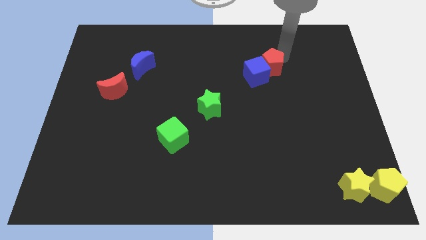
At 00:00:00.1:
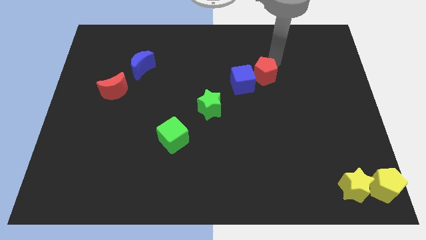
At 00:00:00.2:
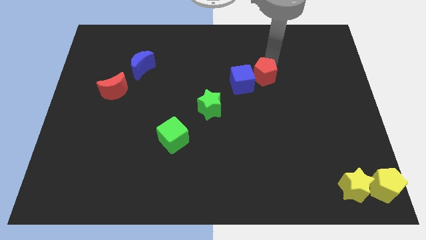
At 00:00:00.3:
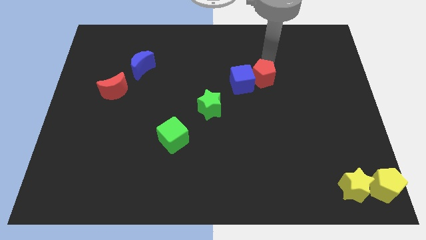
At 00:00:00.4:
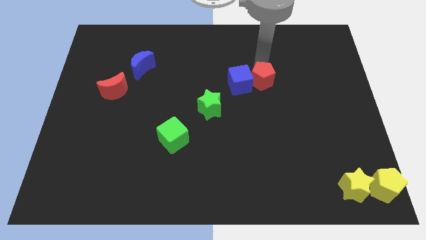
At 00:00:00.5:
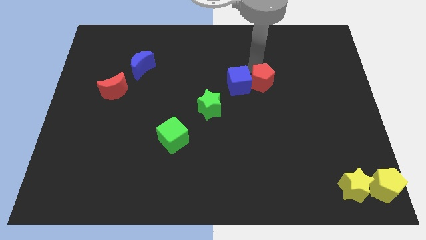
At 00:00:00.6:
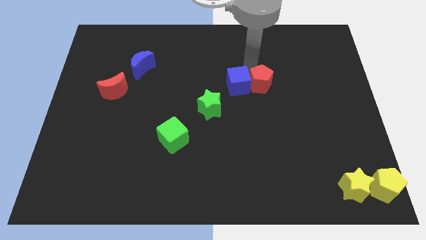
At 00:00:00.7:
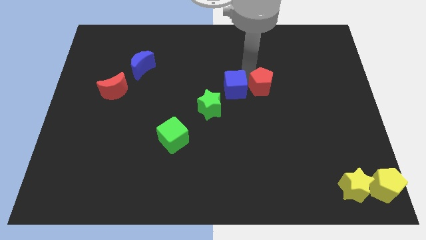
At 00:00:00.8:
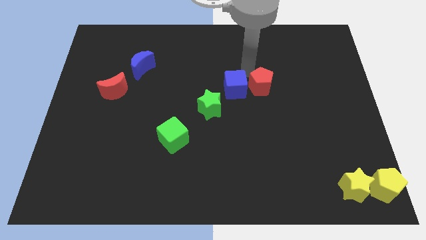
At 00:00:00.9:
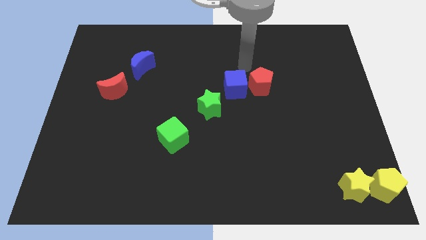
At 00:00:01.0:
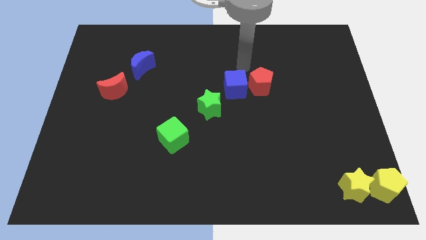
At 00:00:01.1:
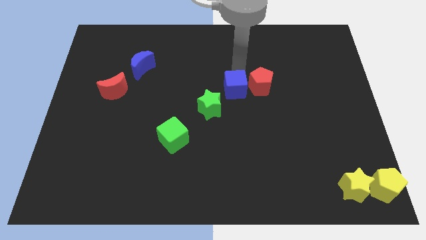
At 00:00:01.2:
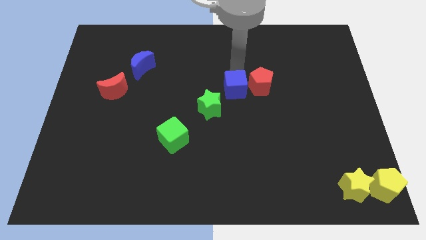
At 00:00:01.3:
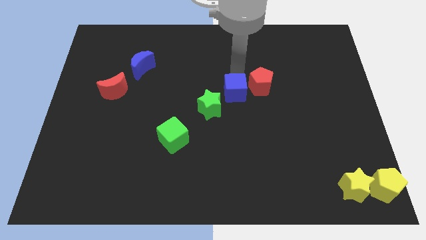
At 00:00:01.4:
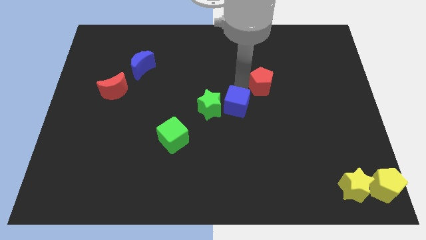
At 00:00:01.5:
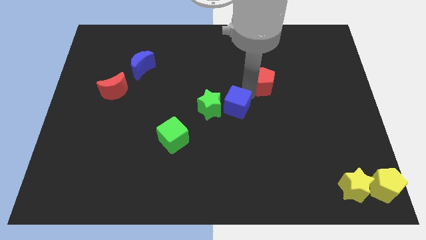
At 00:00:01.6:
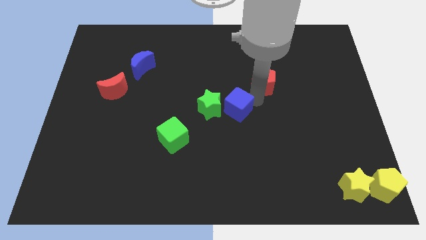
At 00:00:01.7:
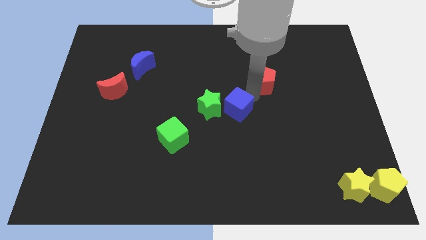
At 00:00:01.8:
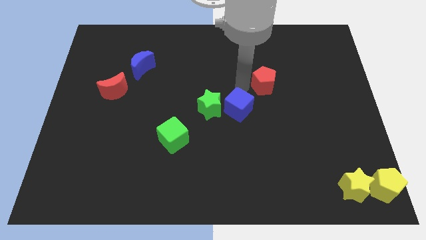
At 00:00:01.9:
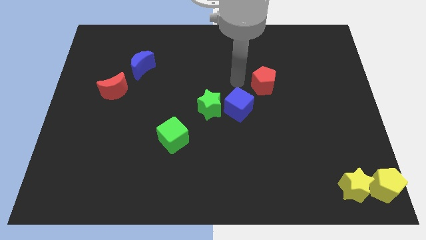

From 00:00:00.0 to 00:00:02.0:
move the blue cube to the center of the board

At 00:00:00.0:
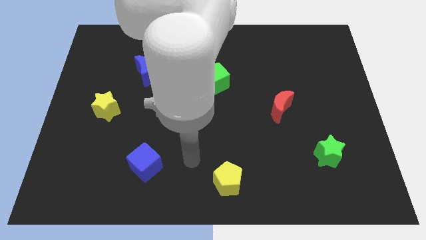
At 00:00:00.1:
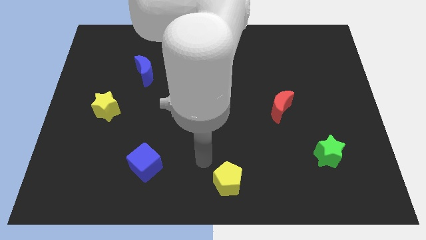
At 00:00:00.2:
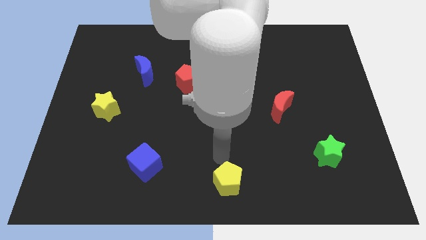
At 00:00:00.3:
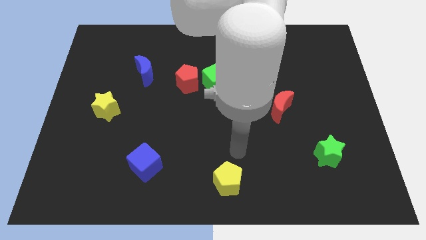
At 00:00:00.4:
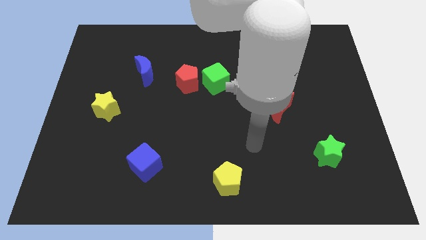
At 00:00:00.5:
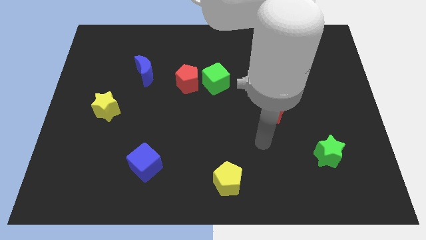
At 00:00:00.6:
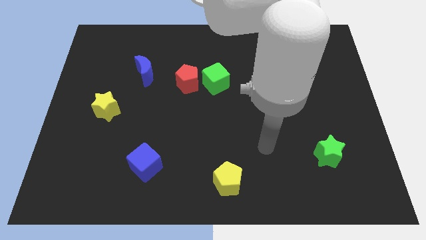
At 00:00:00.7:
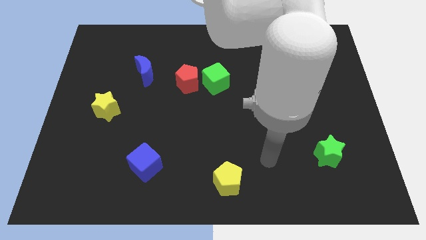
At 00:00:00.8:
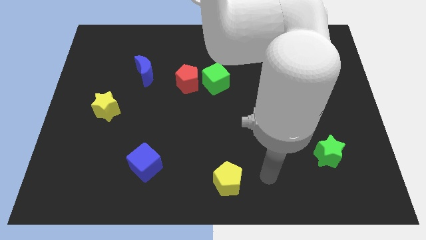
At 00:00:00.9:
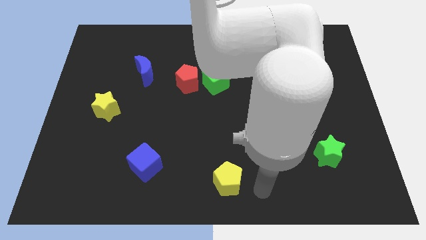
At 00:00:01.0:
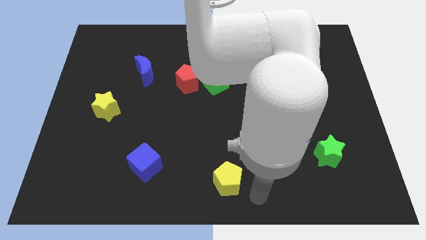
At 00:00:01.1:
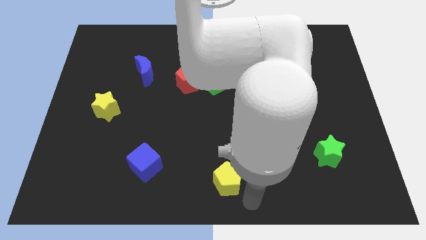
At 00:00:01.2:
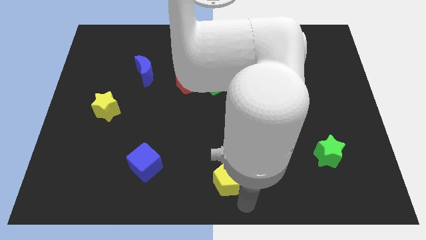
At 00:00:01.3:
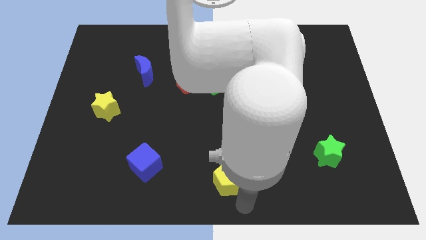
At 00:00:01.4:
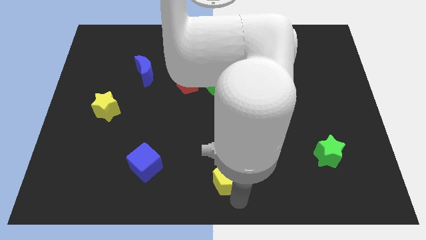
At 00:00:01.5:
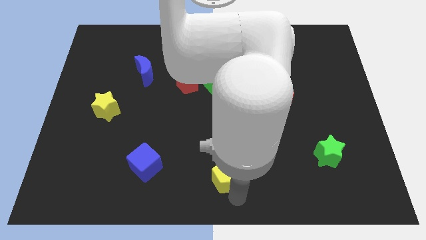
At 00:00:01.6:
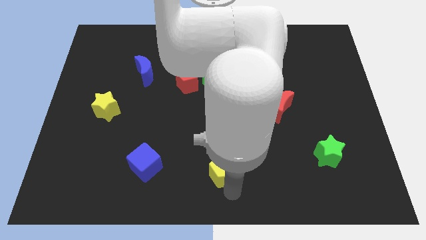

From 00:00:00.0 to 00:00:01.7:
push yellow pentagon slightly upwards

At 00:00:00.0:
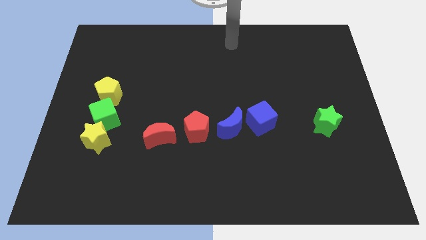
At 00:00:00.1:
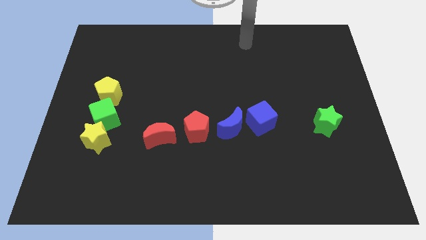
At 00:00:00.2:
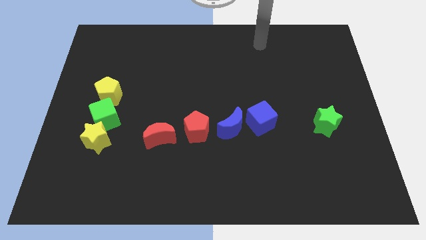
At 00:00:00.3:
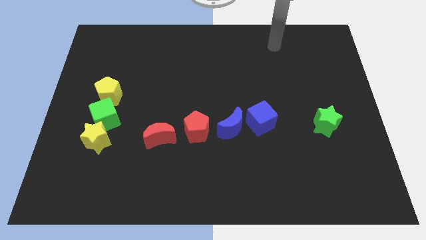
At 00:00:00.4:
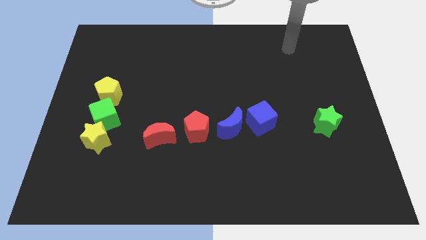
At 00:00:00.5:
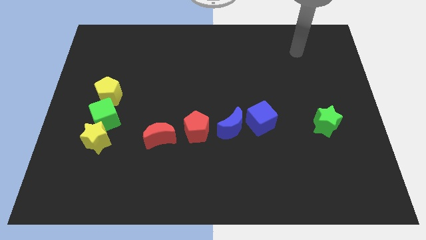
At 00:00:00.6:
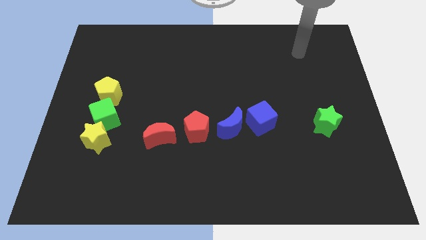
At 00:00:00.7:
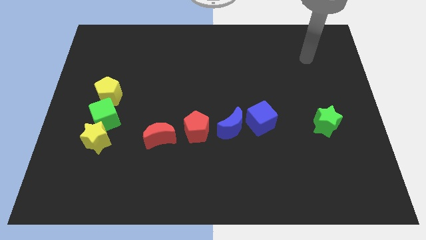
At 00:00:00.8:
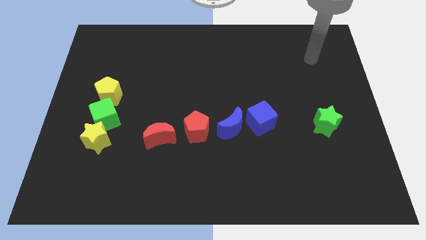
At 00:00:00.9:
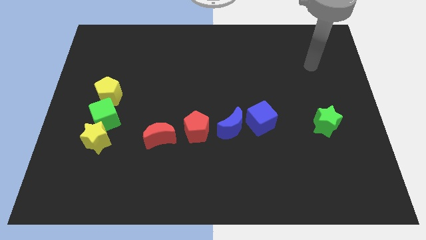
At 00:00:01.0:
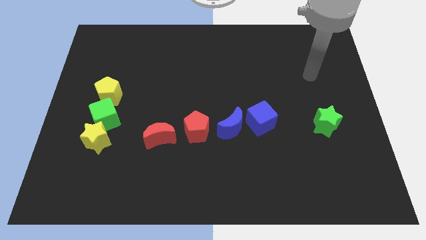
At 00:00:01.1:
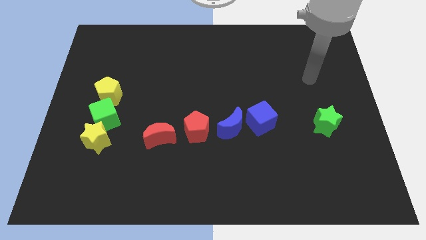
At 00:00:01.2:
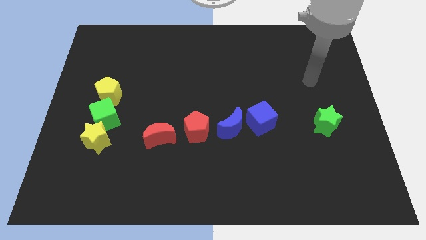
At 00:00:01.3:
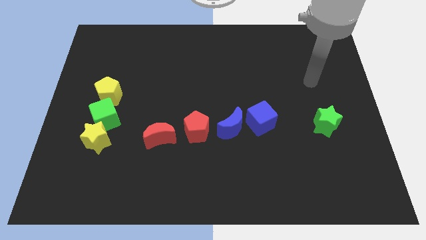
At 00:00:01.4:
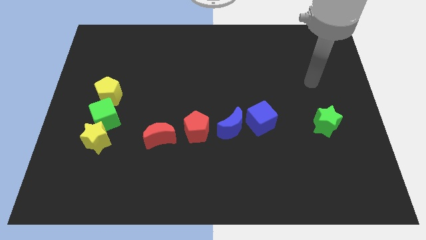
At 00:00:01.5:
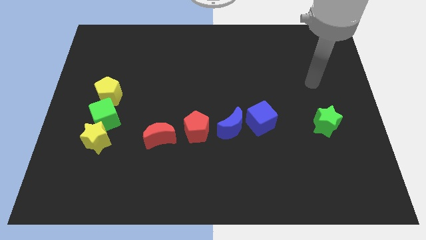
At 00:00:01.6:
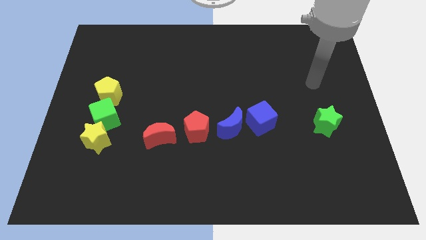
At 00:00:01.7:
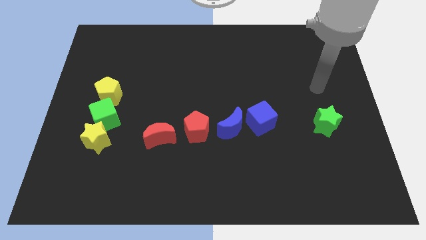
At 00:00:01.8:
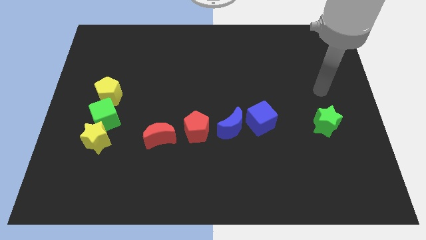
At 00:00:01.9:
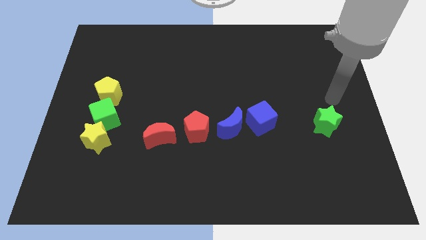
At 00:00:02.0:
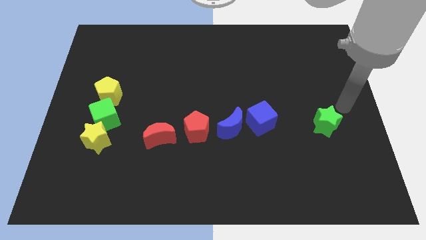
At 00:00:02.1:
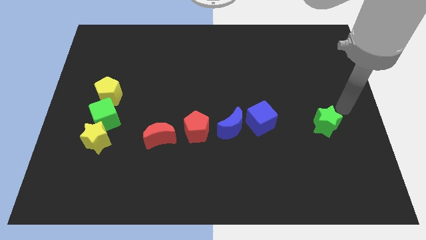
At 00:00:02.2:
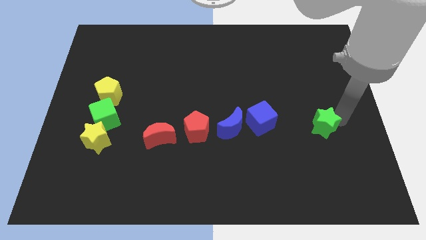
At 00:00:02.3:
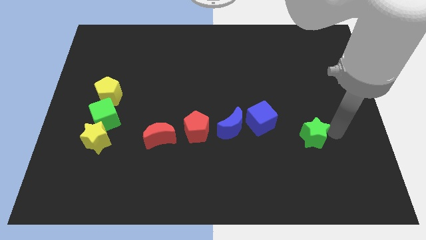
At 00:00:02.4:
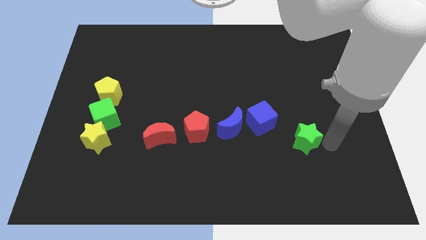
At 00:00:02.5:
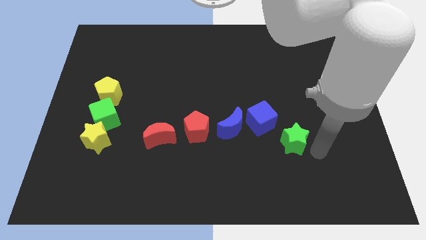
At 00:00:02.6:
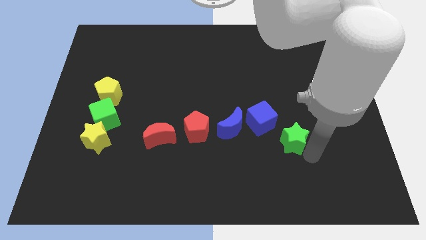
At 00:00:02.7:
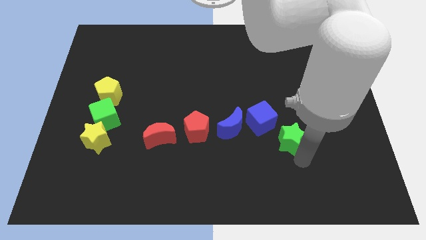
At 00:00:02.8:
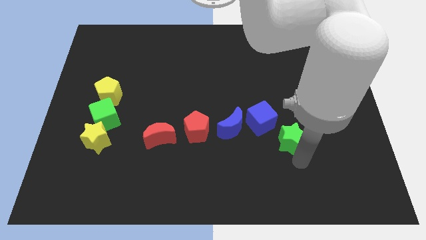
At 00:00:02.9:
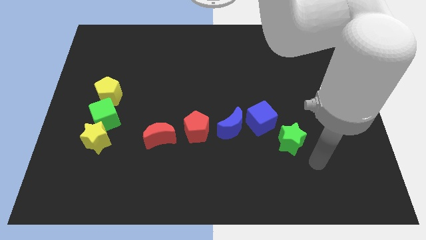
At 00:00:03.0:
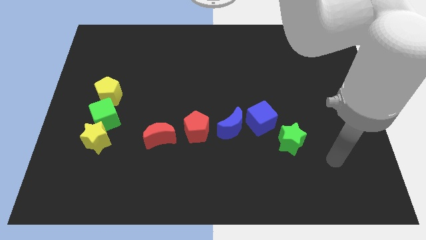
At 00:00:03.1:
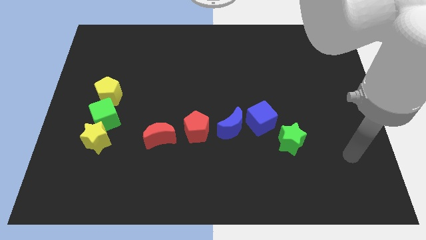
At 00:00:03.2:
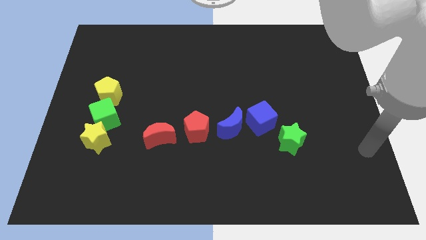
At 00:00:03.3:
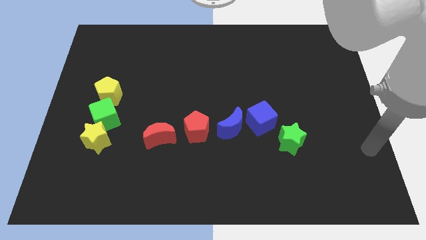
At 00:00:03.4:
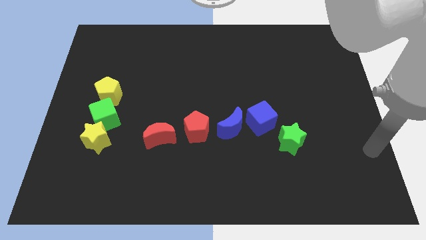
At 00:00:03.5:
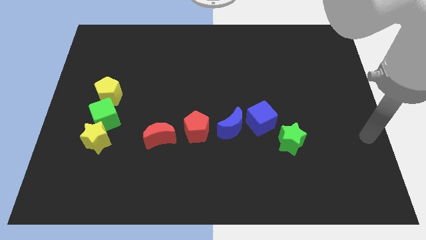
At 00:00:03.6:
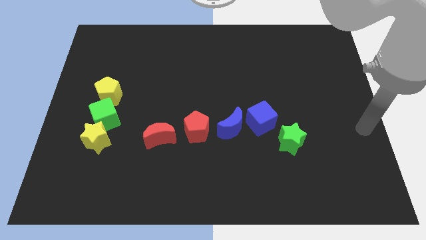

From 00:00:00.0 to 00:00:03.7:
push the green star to the bottom right side of the blue cube

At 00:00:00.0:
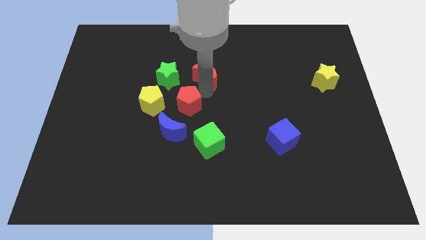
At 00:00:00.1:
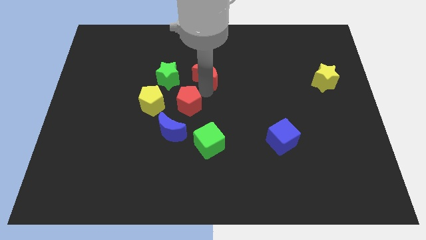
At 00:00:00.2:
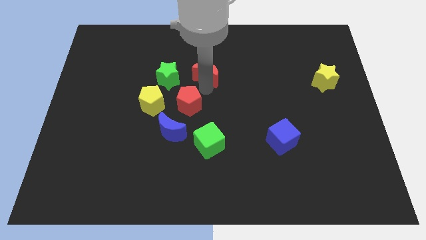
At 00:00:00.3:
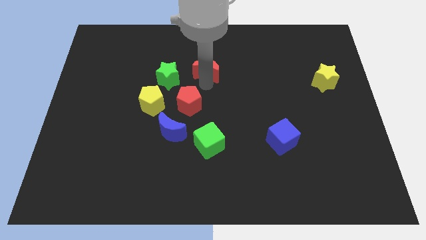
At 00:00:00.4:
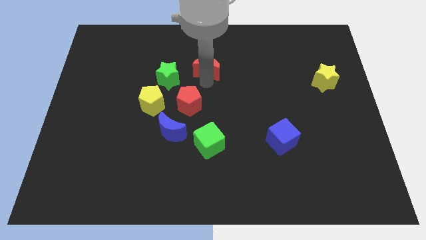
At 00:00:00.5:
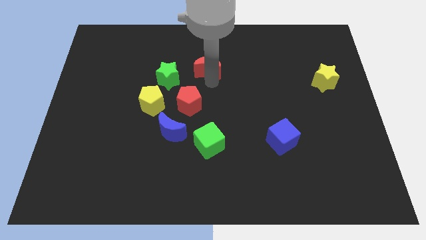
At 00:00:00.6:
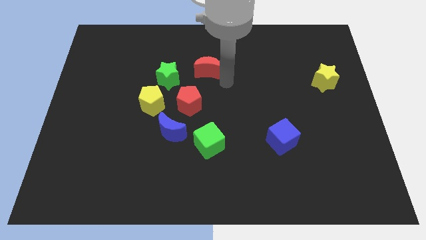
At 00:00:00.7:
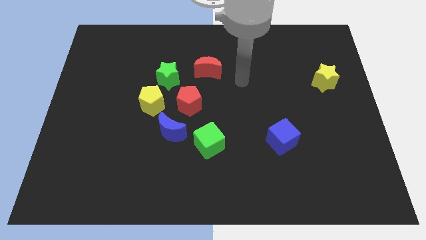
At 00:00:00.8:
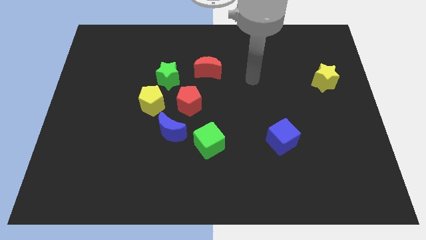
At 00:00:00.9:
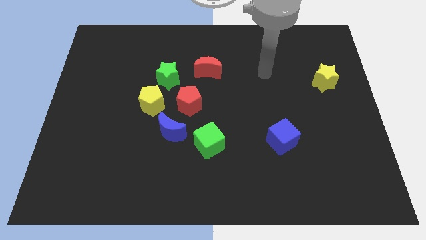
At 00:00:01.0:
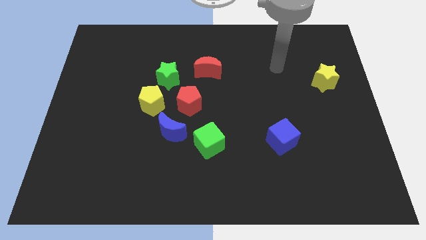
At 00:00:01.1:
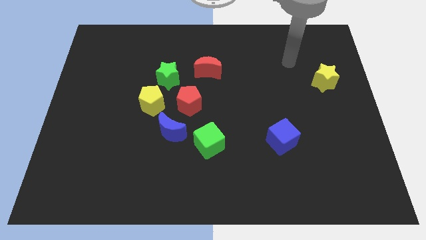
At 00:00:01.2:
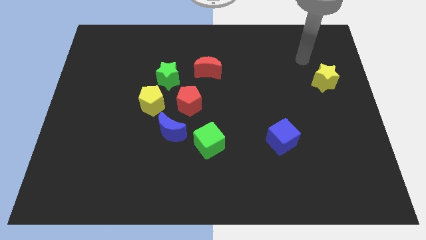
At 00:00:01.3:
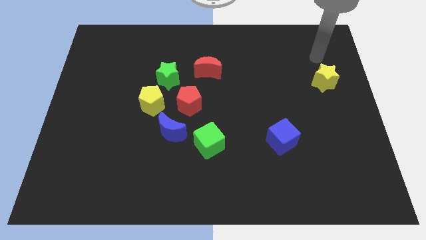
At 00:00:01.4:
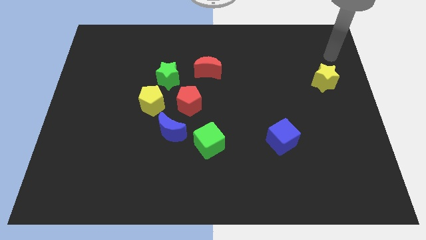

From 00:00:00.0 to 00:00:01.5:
push the red crescent slightly to the top and move away from it

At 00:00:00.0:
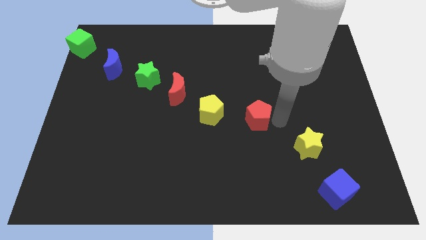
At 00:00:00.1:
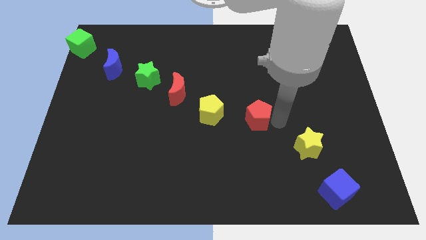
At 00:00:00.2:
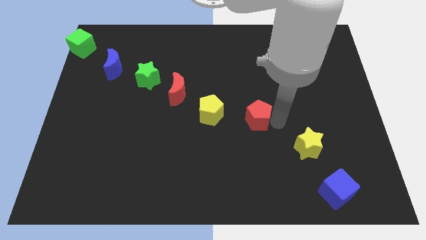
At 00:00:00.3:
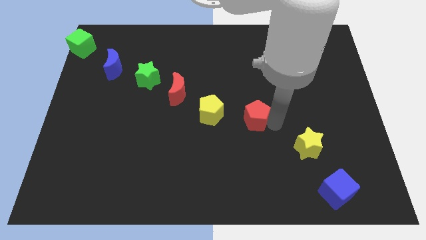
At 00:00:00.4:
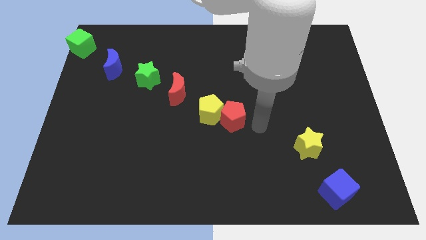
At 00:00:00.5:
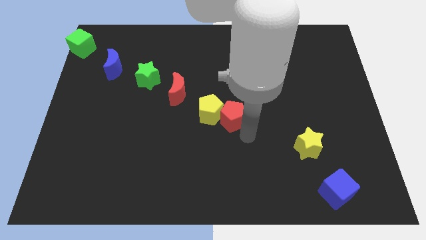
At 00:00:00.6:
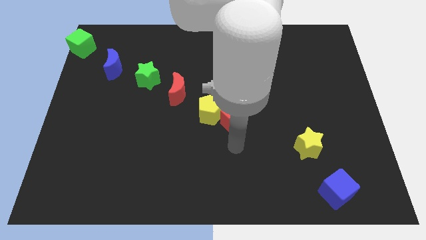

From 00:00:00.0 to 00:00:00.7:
push the red pentagon to yellow pentagon
